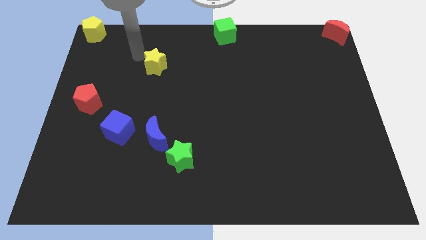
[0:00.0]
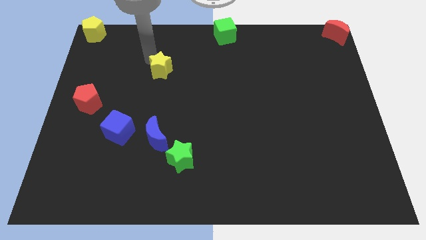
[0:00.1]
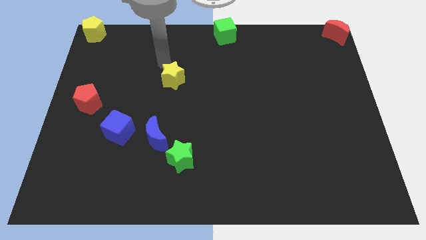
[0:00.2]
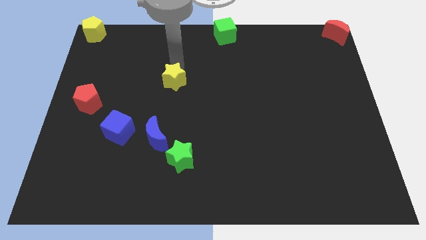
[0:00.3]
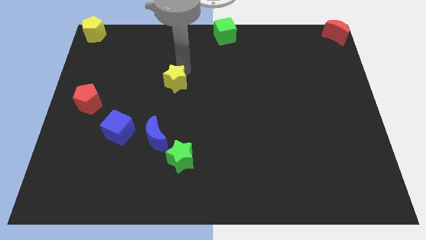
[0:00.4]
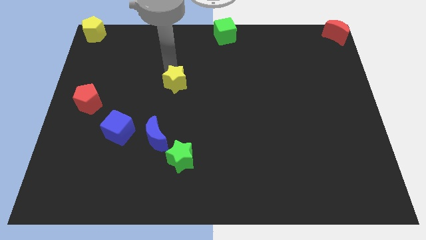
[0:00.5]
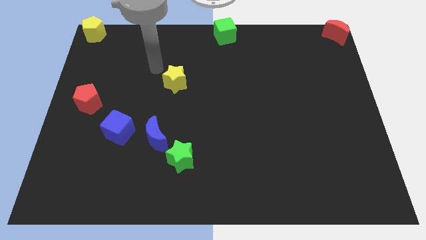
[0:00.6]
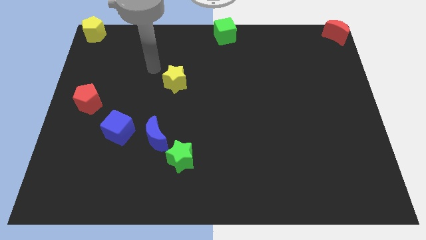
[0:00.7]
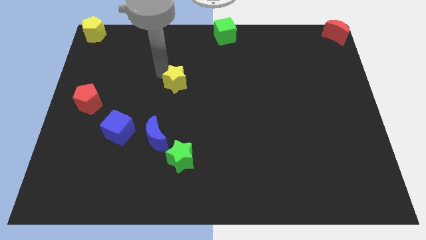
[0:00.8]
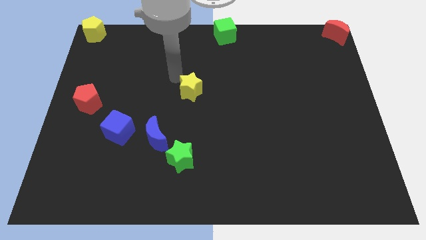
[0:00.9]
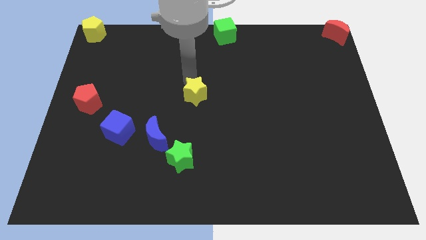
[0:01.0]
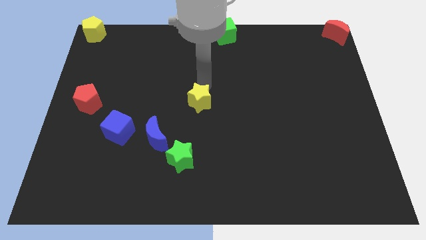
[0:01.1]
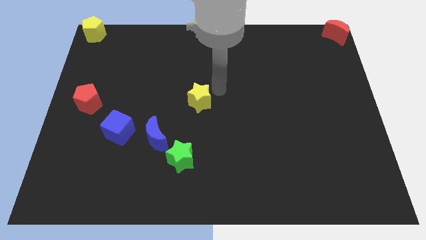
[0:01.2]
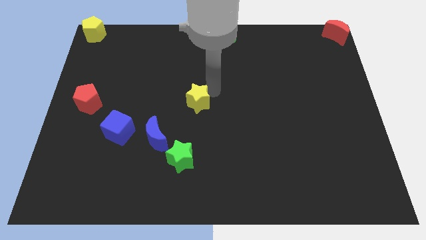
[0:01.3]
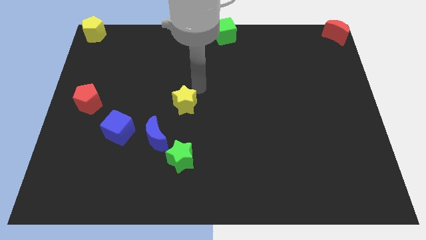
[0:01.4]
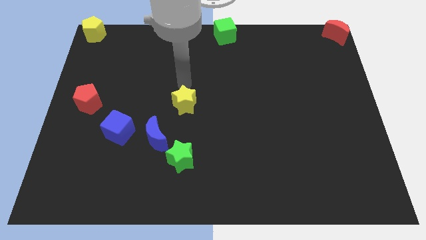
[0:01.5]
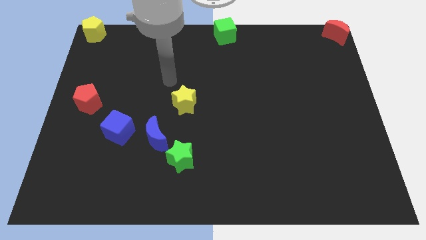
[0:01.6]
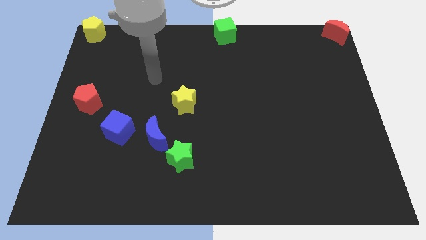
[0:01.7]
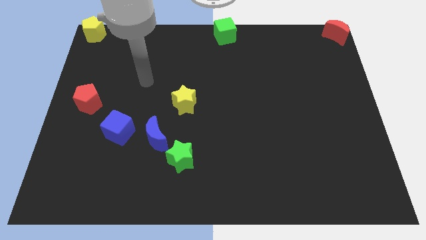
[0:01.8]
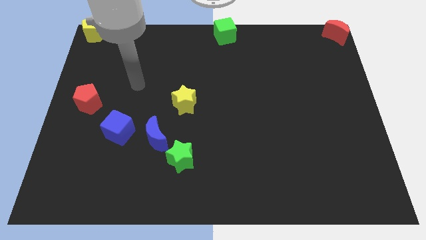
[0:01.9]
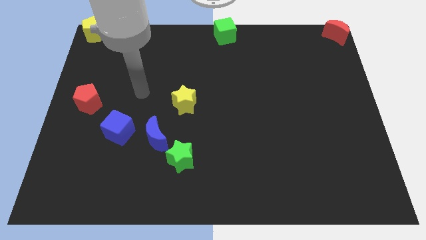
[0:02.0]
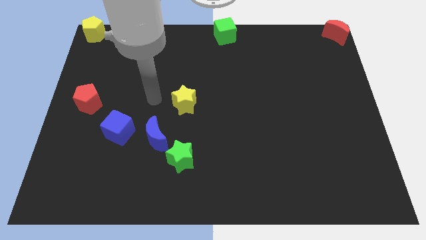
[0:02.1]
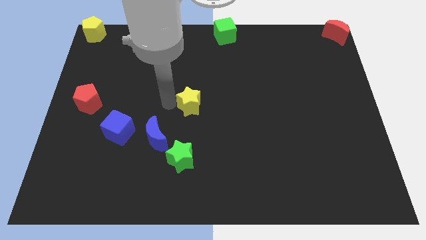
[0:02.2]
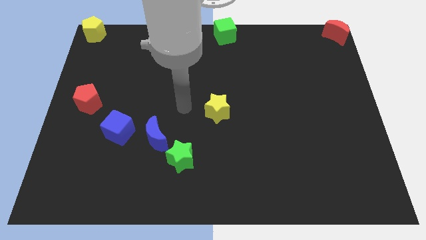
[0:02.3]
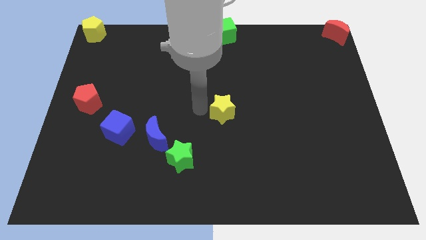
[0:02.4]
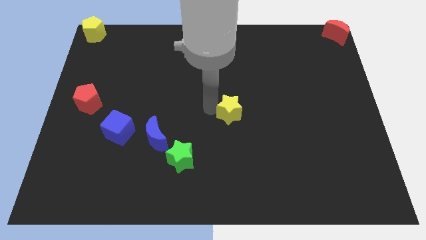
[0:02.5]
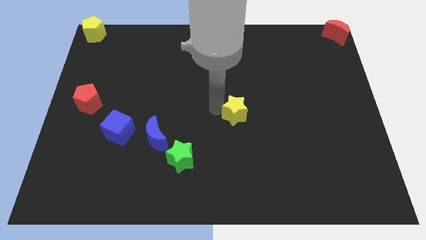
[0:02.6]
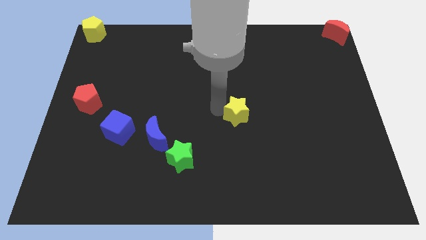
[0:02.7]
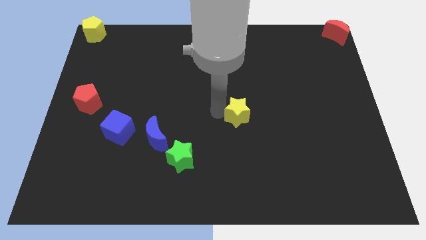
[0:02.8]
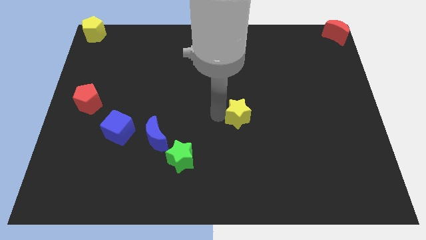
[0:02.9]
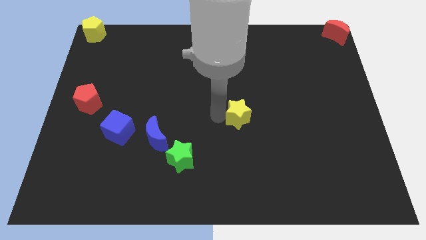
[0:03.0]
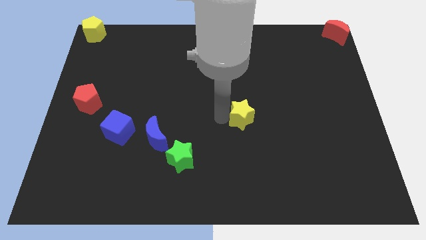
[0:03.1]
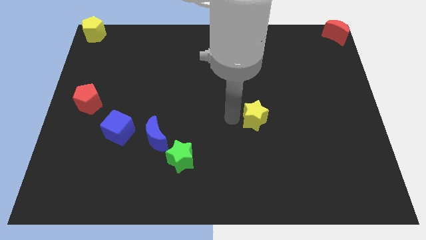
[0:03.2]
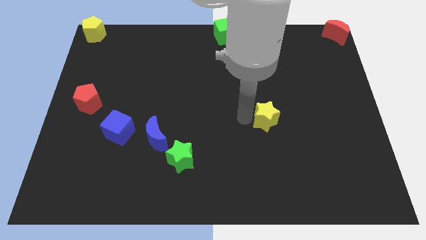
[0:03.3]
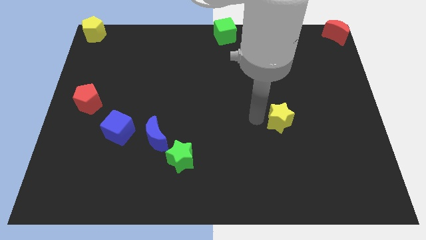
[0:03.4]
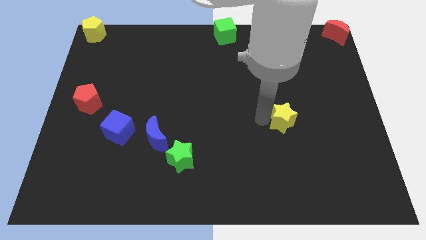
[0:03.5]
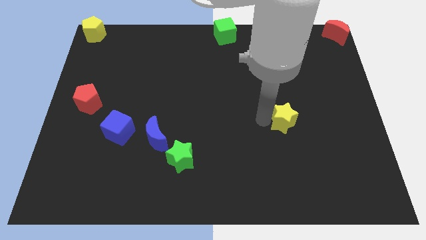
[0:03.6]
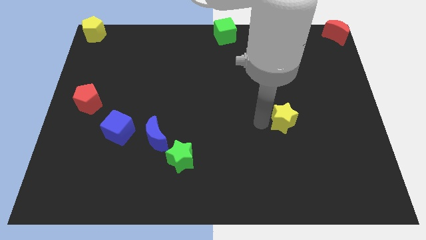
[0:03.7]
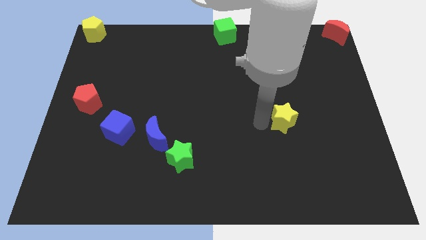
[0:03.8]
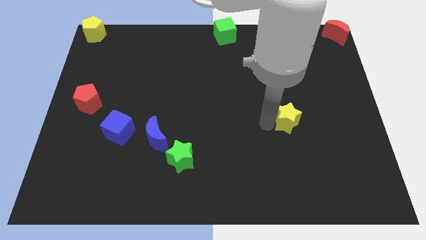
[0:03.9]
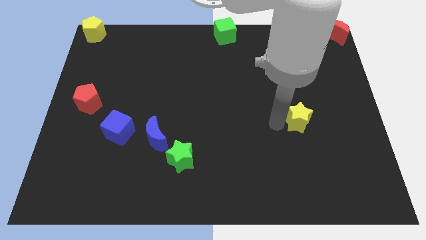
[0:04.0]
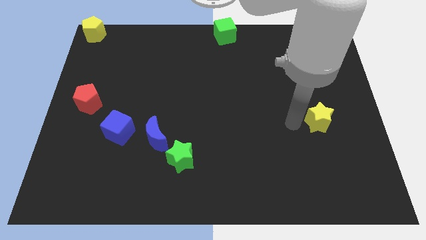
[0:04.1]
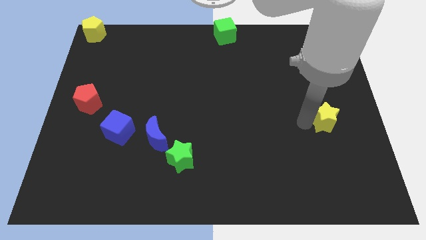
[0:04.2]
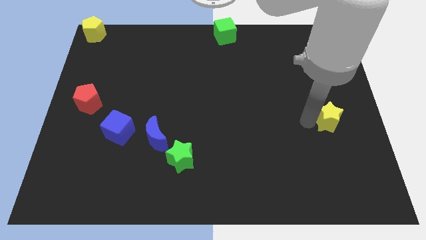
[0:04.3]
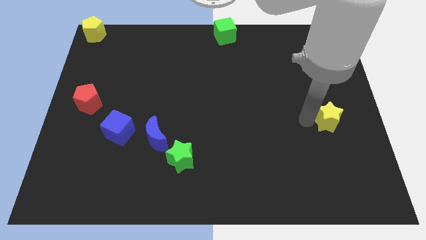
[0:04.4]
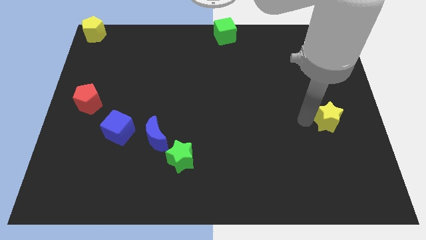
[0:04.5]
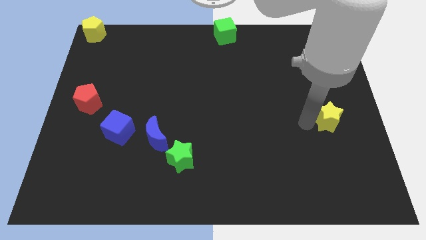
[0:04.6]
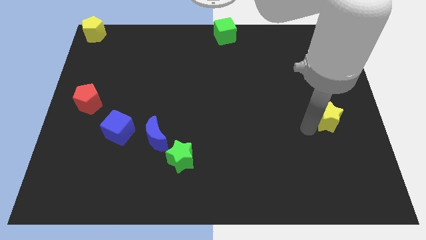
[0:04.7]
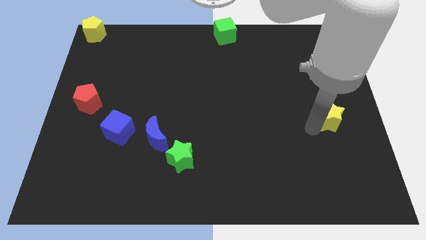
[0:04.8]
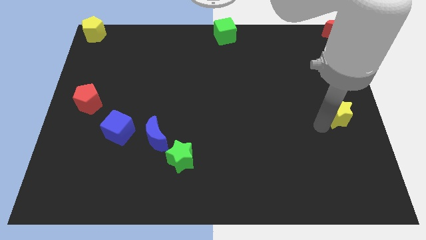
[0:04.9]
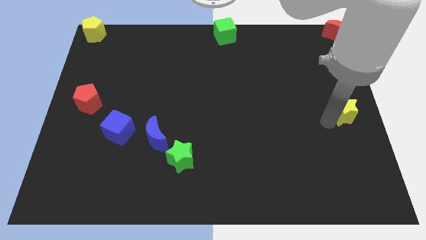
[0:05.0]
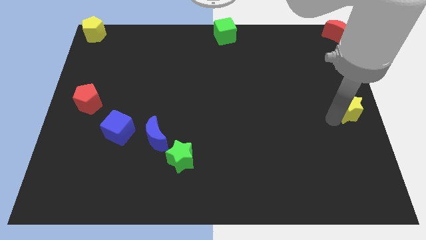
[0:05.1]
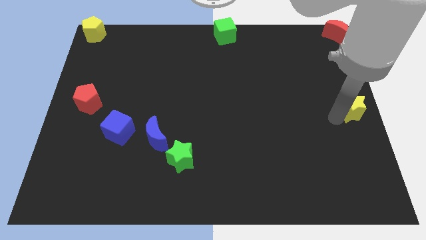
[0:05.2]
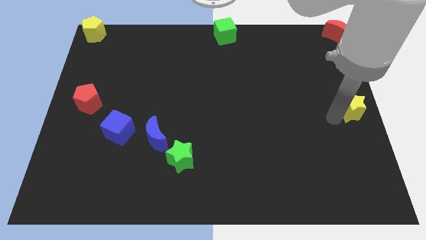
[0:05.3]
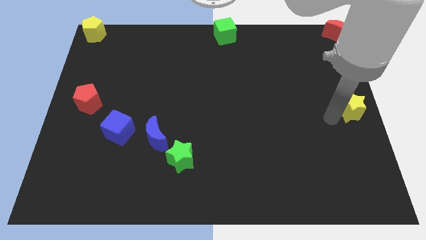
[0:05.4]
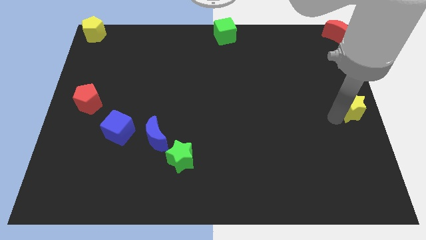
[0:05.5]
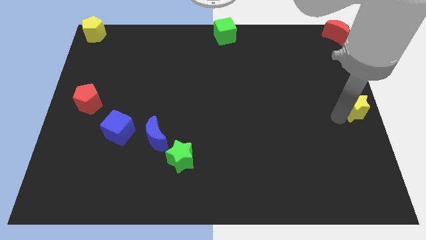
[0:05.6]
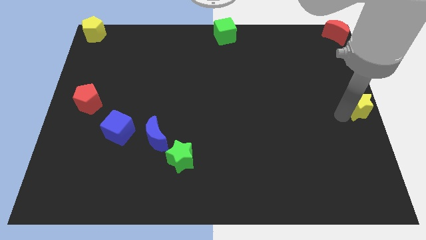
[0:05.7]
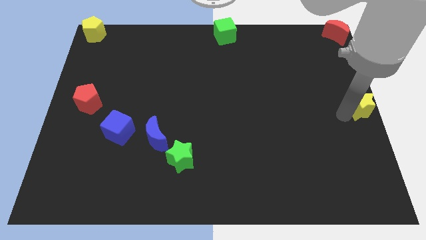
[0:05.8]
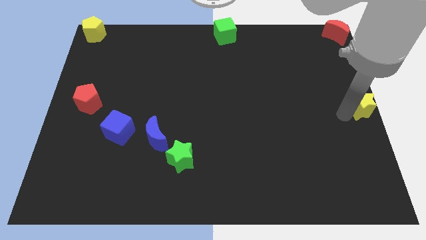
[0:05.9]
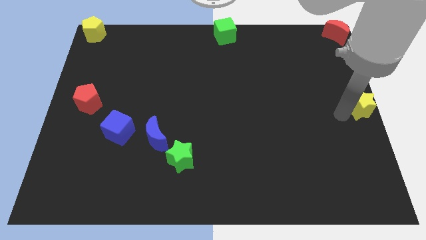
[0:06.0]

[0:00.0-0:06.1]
place yellow star to the center right

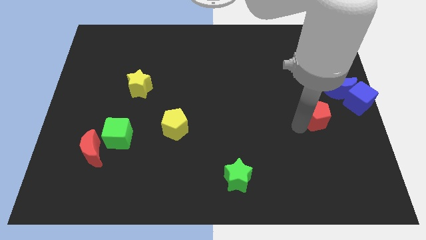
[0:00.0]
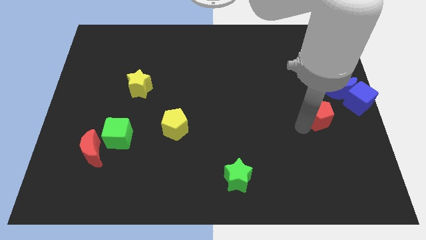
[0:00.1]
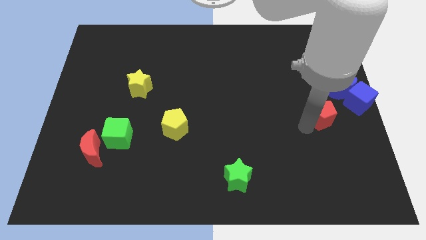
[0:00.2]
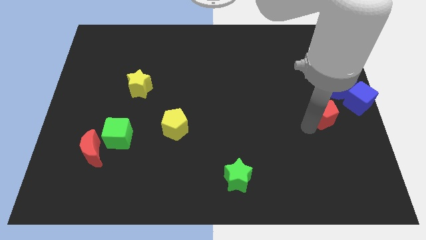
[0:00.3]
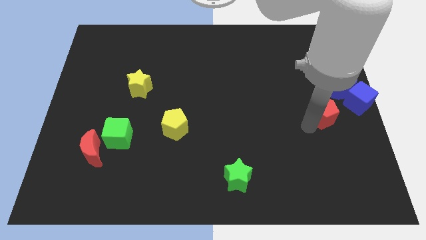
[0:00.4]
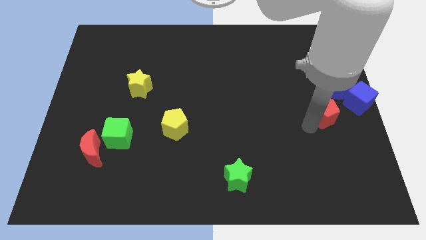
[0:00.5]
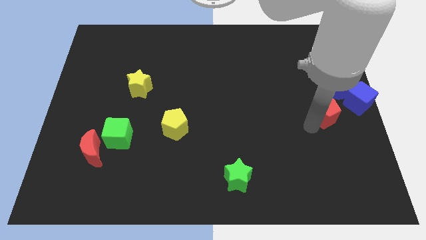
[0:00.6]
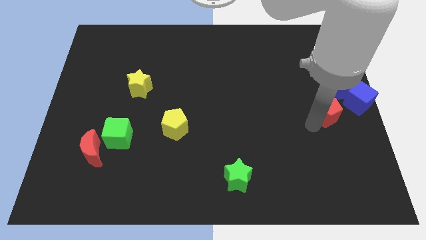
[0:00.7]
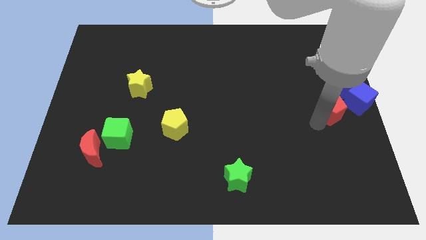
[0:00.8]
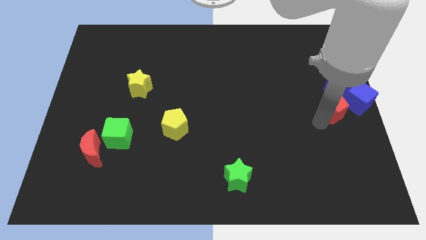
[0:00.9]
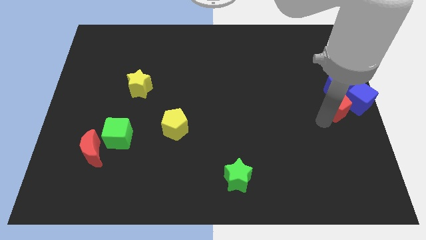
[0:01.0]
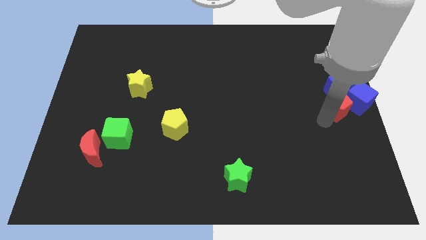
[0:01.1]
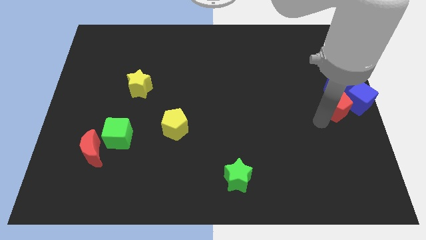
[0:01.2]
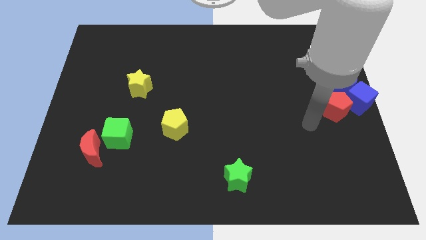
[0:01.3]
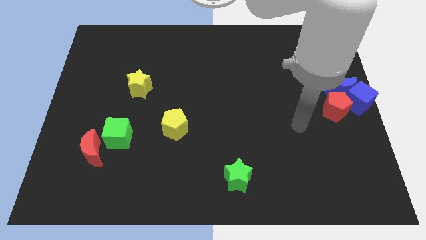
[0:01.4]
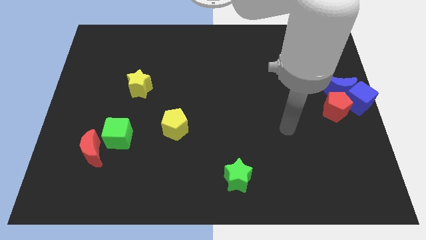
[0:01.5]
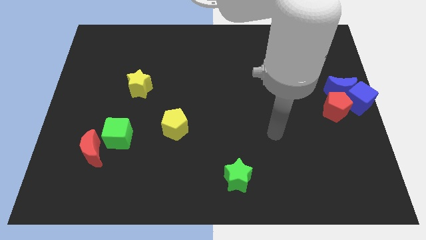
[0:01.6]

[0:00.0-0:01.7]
slide the red pentagon to the center right of the board

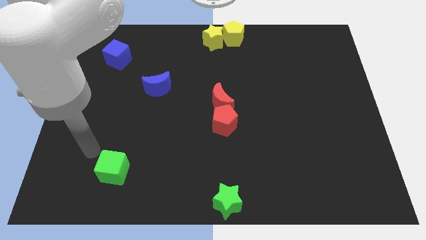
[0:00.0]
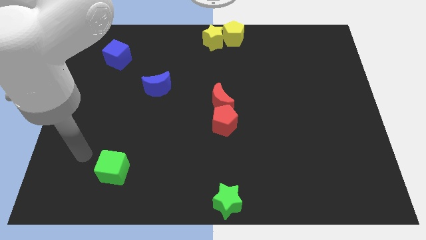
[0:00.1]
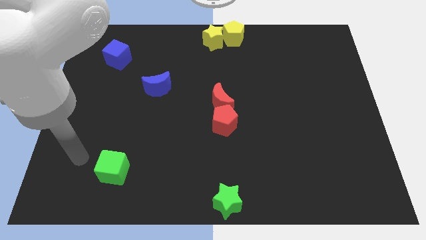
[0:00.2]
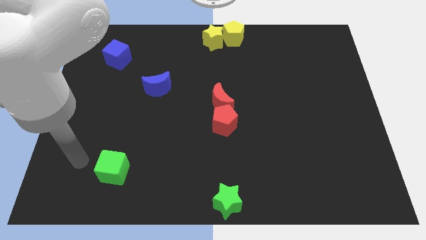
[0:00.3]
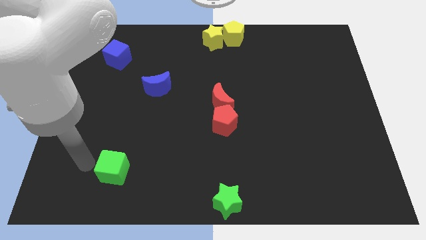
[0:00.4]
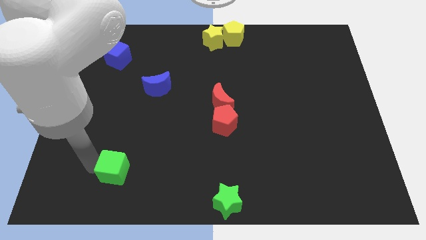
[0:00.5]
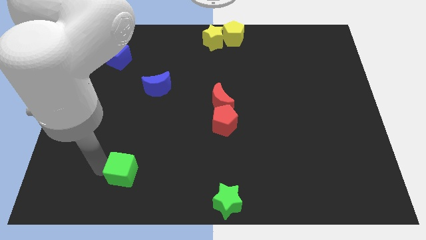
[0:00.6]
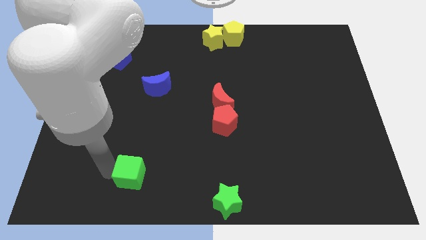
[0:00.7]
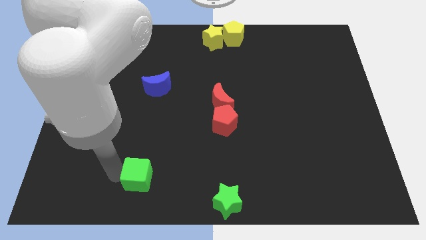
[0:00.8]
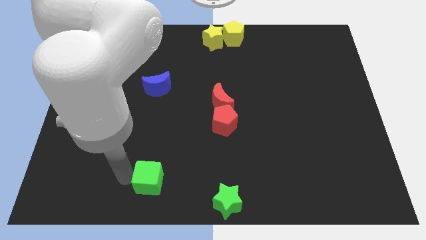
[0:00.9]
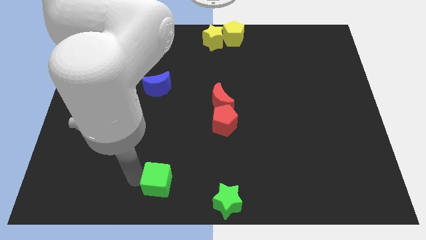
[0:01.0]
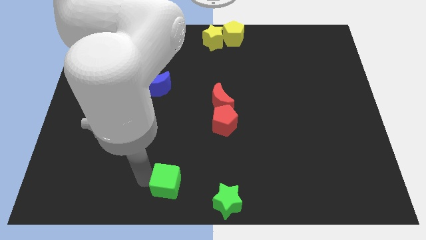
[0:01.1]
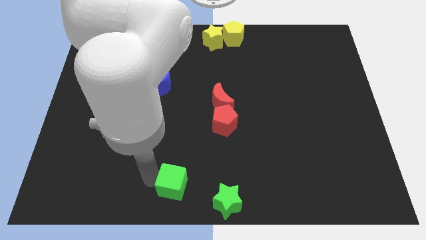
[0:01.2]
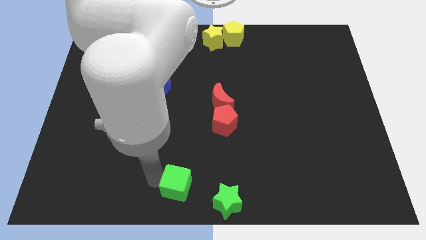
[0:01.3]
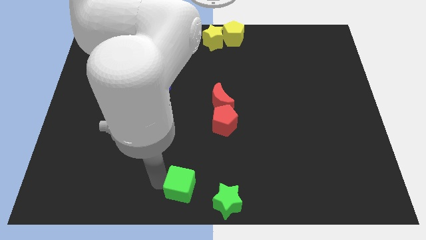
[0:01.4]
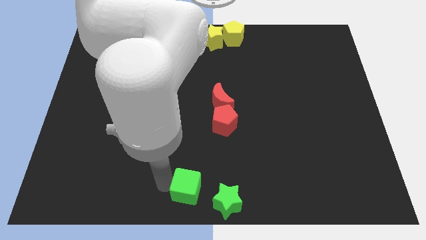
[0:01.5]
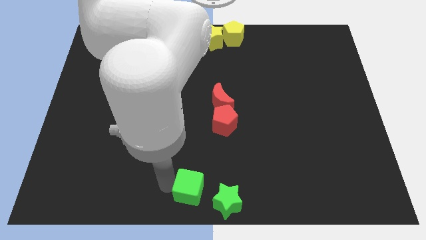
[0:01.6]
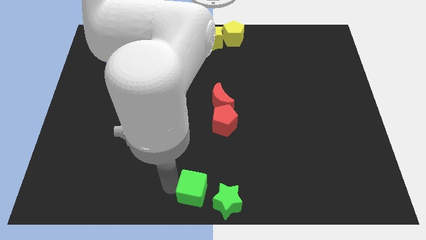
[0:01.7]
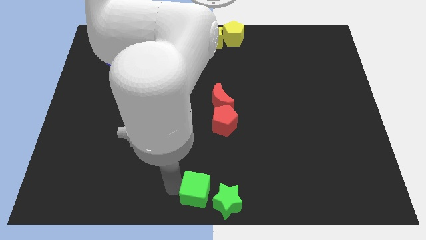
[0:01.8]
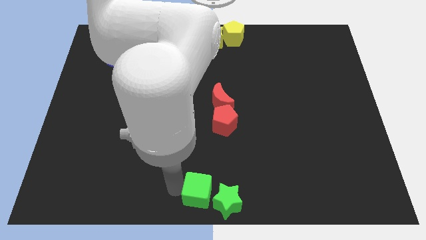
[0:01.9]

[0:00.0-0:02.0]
push the green cube towards the green star
